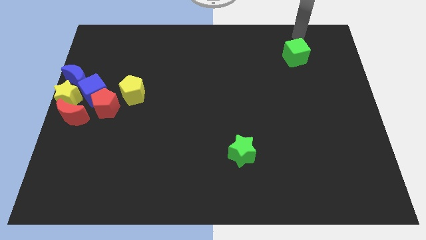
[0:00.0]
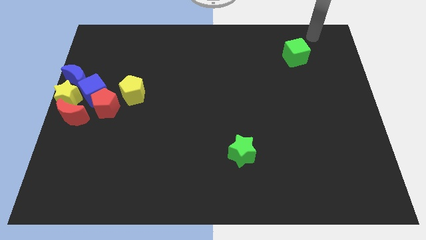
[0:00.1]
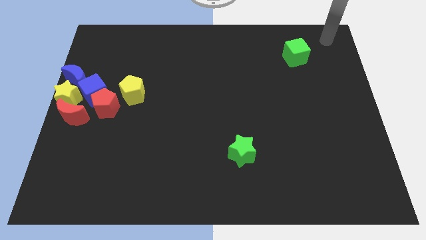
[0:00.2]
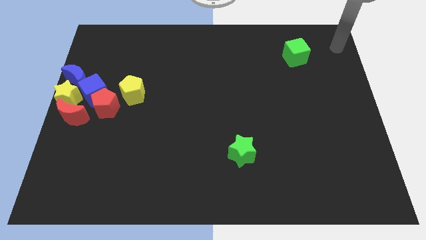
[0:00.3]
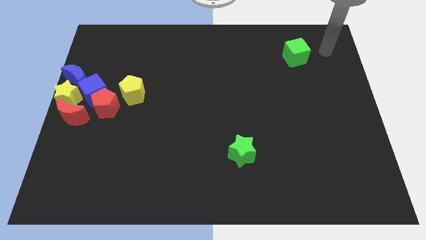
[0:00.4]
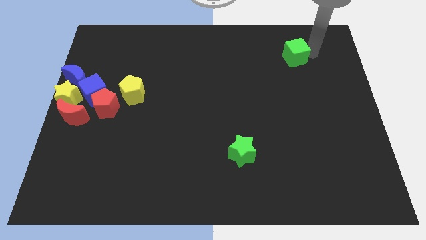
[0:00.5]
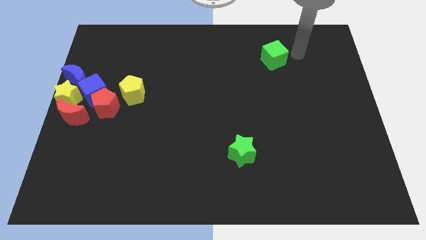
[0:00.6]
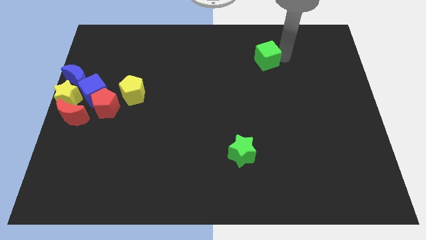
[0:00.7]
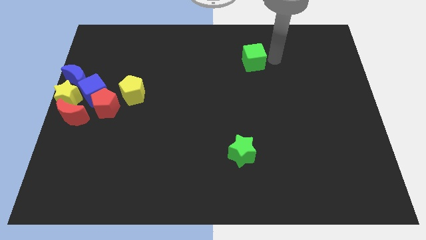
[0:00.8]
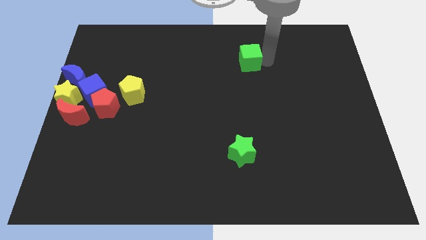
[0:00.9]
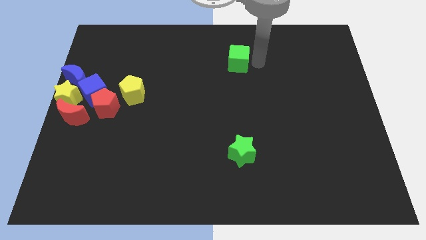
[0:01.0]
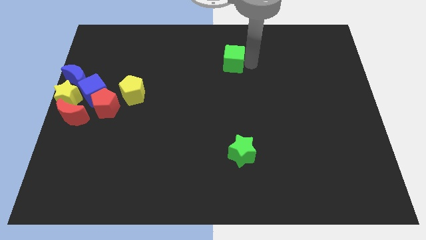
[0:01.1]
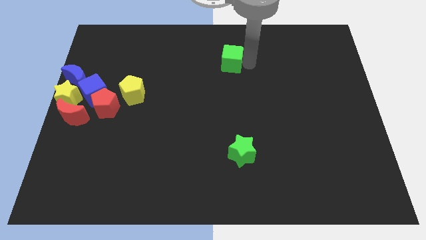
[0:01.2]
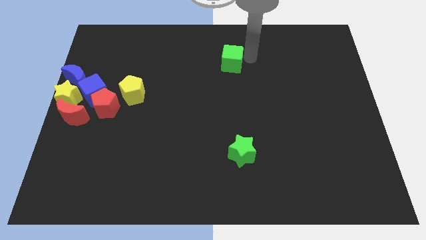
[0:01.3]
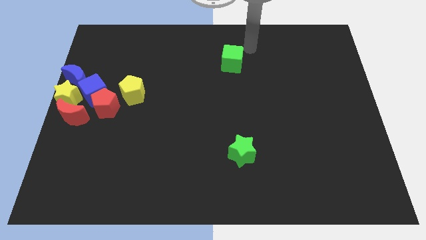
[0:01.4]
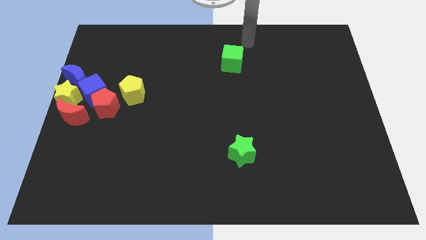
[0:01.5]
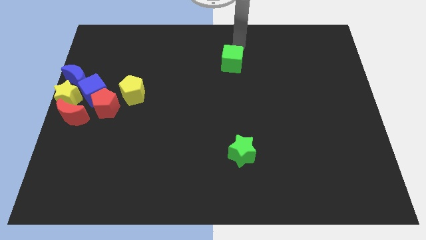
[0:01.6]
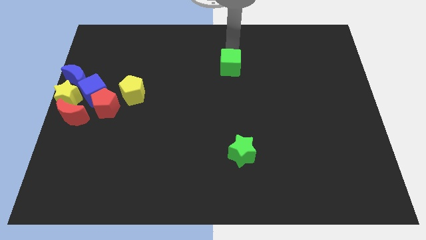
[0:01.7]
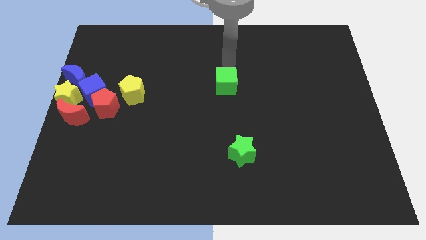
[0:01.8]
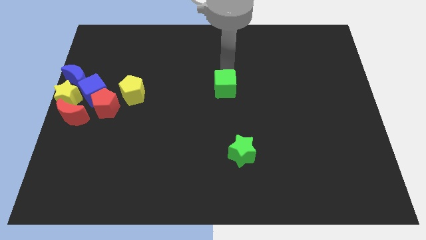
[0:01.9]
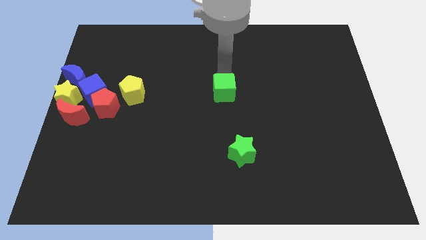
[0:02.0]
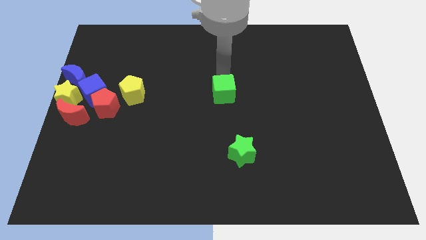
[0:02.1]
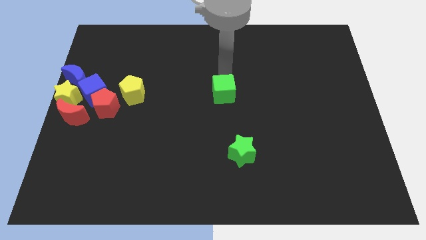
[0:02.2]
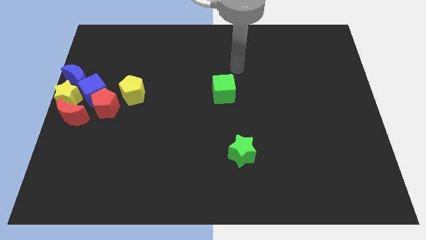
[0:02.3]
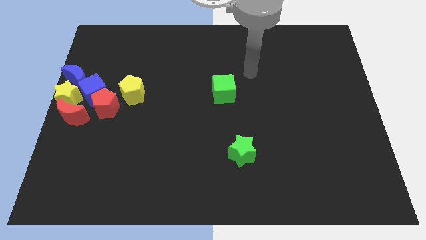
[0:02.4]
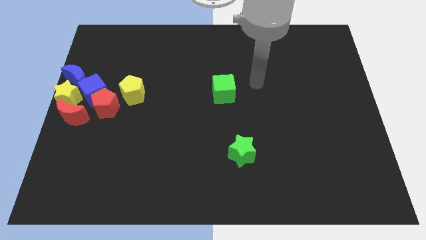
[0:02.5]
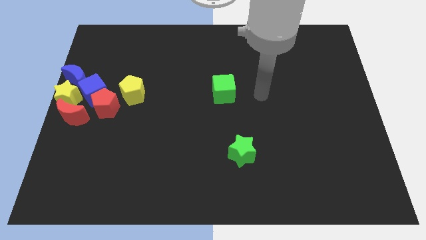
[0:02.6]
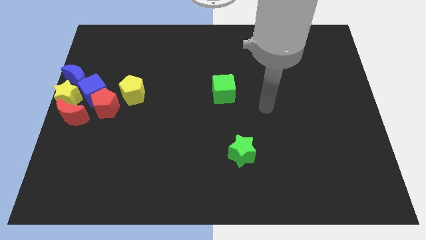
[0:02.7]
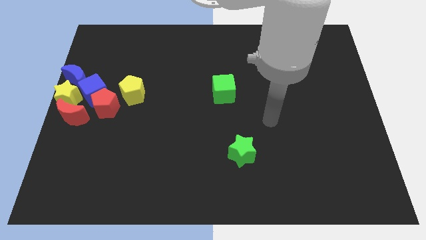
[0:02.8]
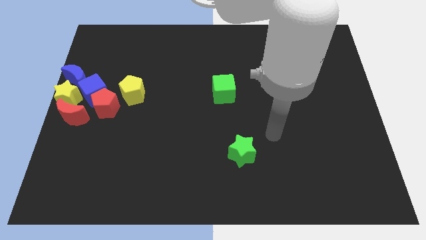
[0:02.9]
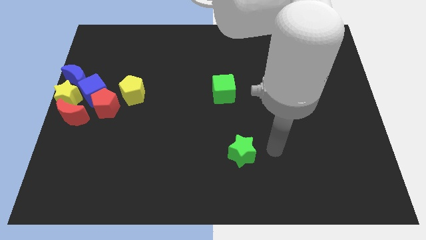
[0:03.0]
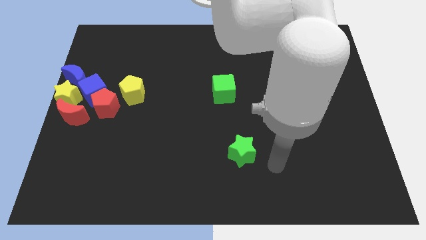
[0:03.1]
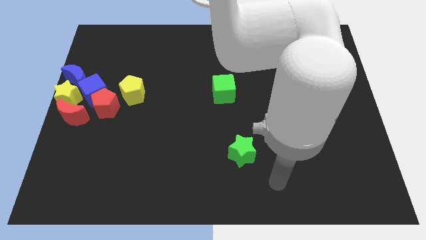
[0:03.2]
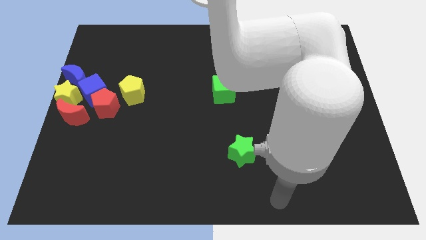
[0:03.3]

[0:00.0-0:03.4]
push the green cube to the center of the board

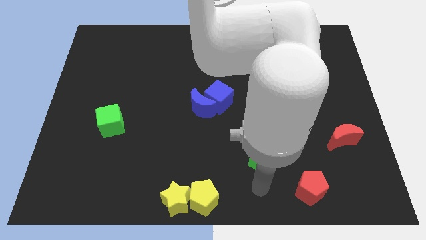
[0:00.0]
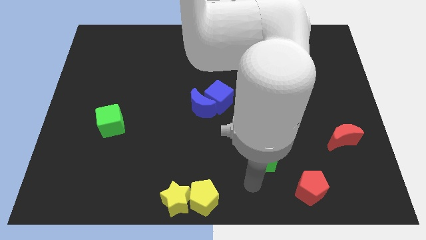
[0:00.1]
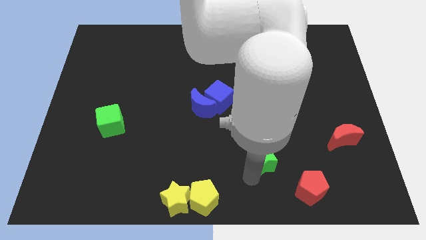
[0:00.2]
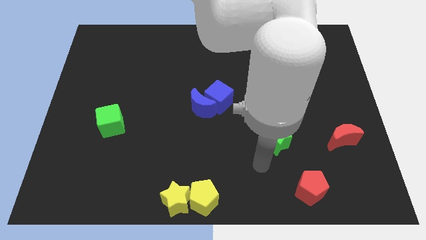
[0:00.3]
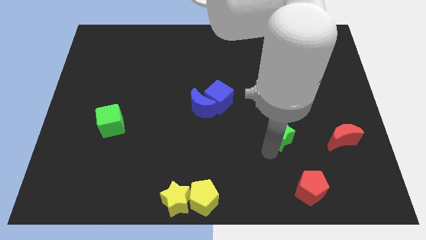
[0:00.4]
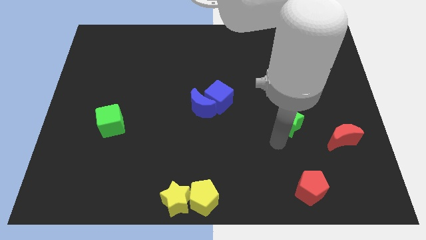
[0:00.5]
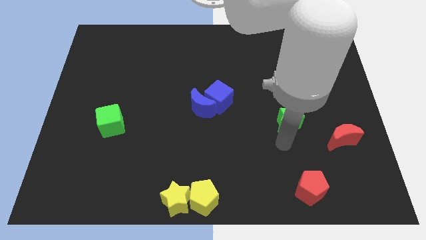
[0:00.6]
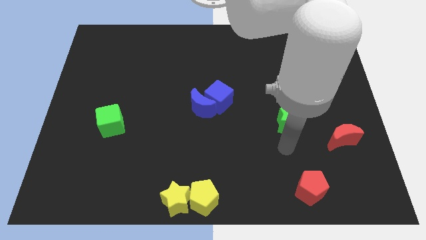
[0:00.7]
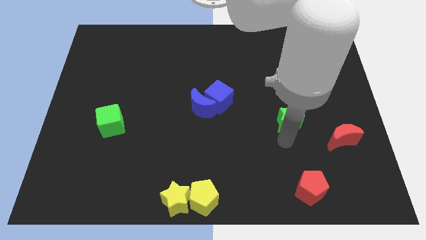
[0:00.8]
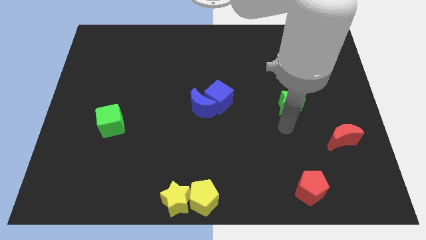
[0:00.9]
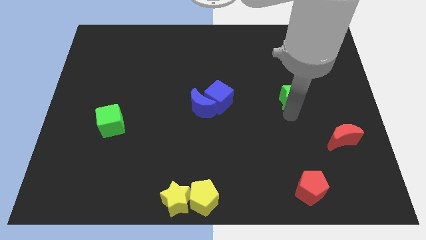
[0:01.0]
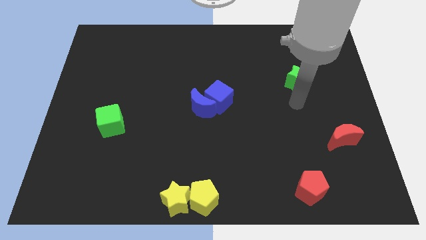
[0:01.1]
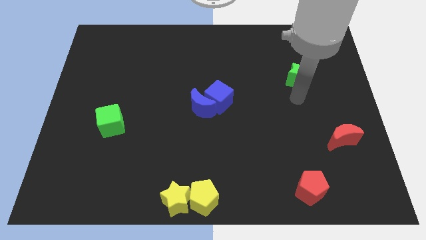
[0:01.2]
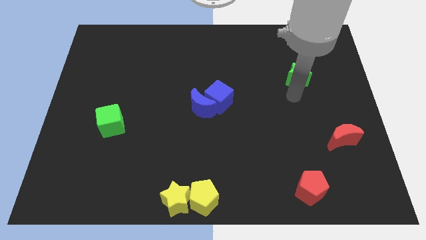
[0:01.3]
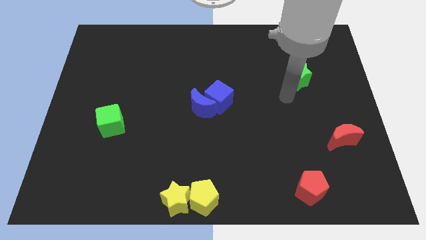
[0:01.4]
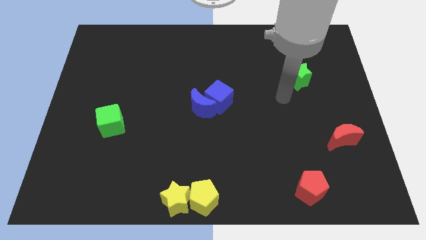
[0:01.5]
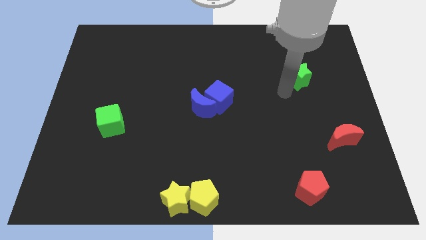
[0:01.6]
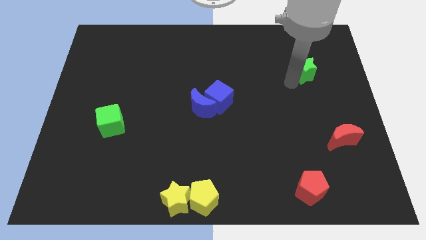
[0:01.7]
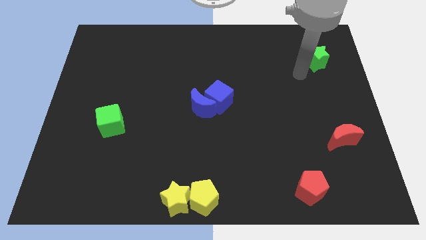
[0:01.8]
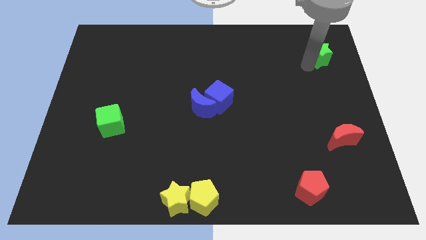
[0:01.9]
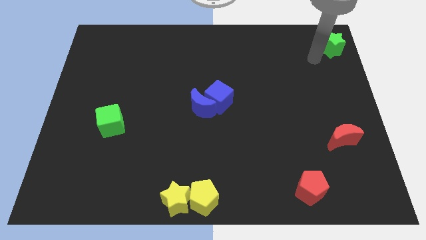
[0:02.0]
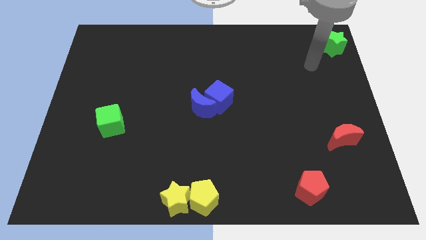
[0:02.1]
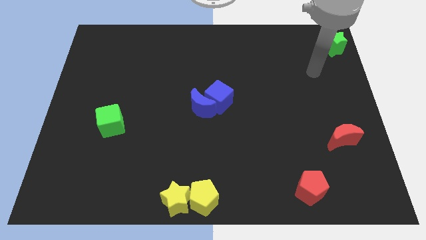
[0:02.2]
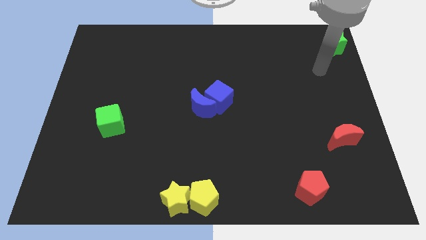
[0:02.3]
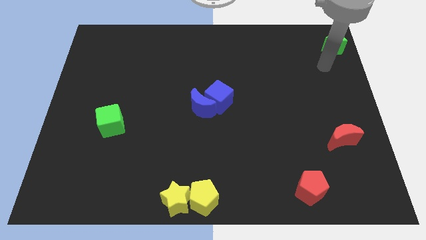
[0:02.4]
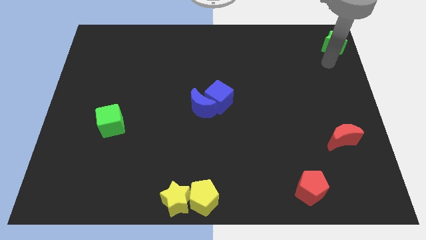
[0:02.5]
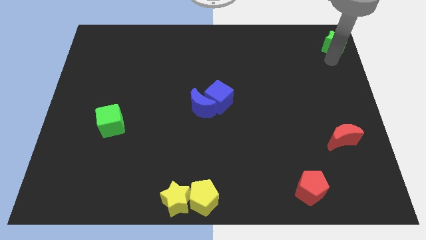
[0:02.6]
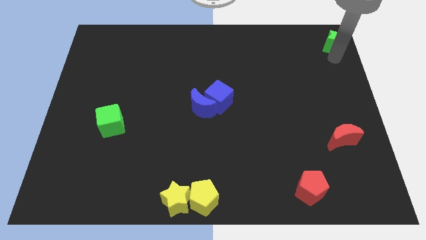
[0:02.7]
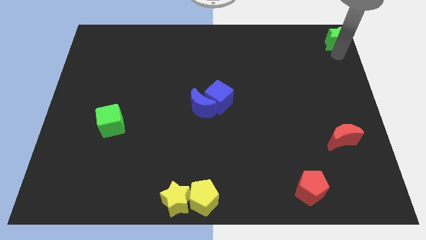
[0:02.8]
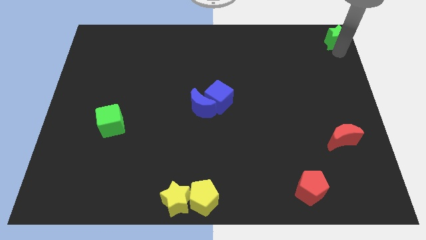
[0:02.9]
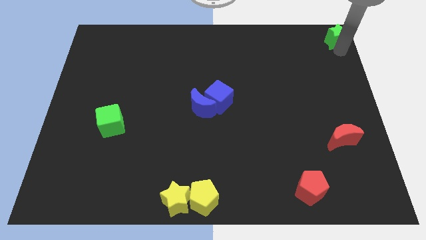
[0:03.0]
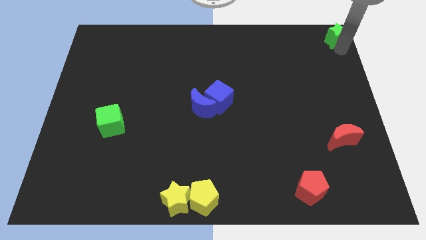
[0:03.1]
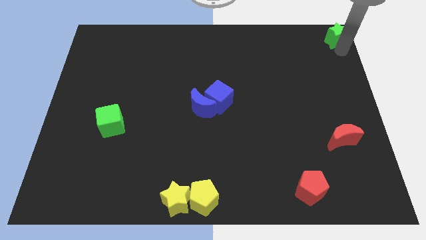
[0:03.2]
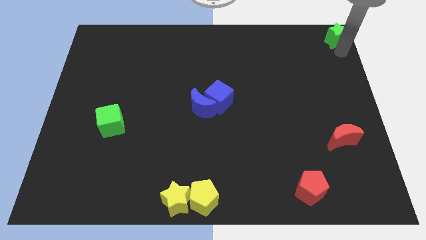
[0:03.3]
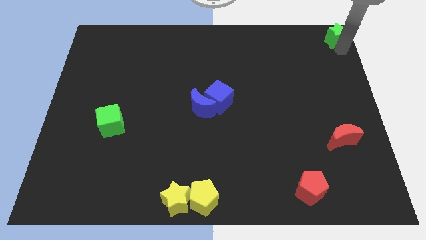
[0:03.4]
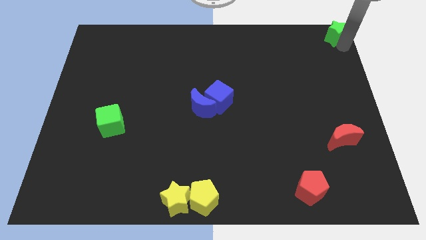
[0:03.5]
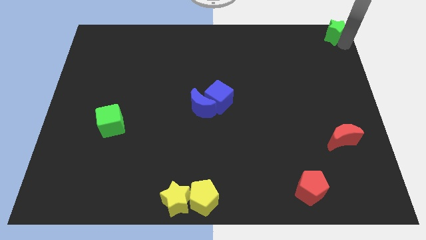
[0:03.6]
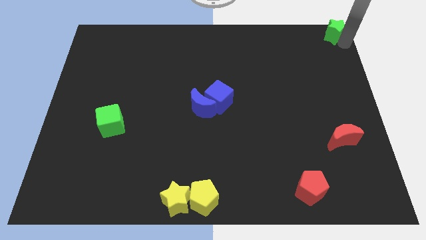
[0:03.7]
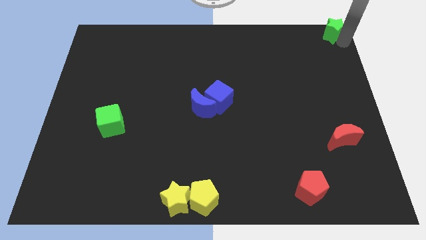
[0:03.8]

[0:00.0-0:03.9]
push the green star to the top right corner of the board

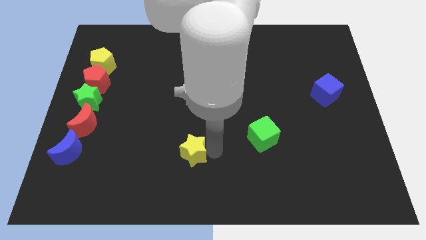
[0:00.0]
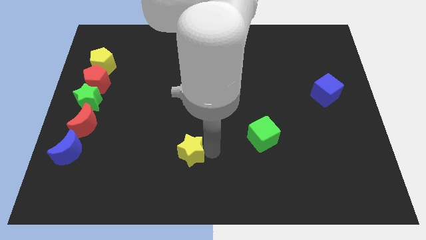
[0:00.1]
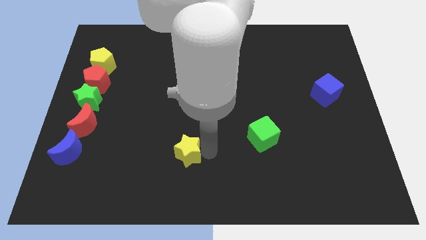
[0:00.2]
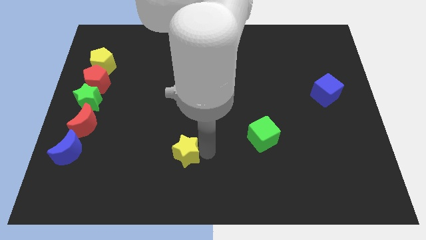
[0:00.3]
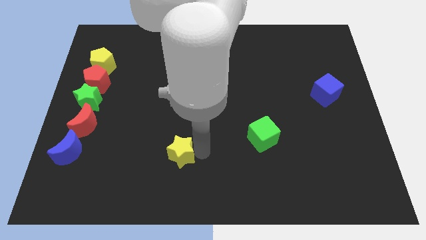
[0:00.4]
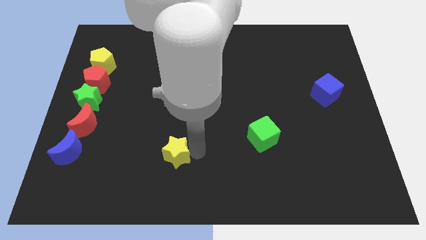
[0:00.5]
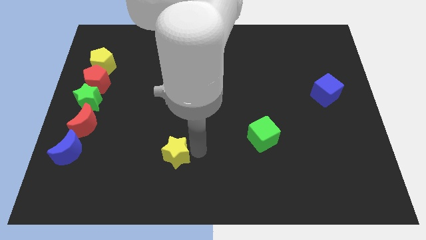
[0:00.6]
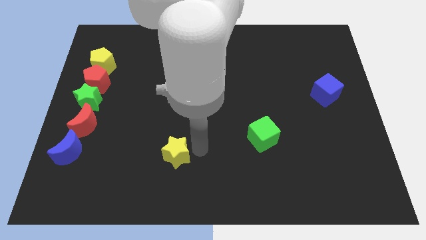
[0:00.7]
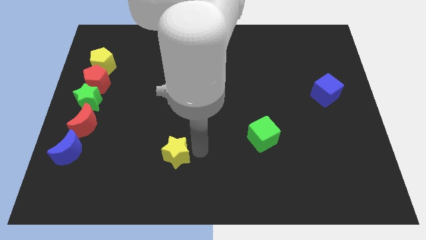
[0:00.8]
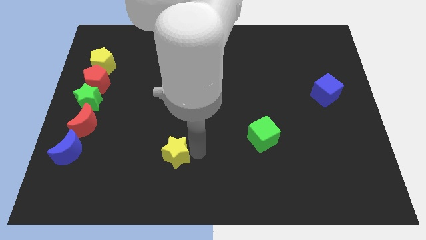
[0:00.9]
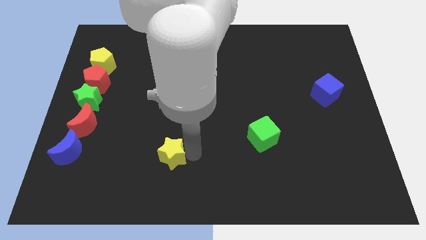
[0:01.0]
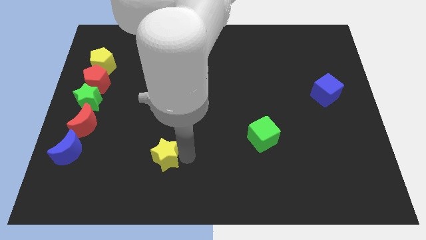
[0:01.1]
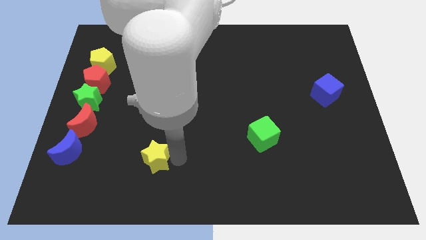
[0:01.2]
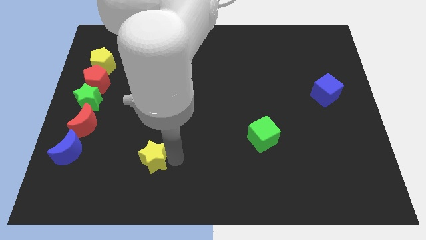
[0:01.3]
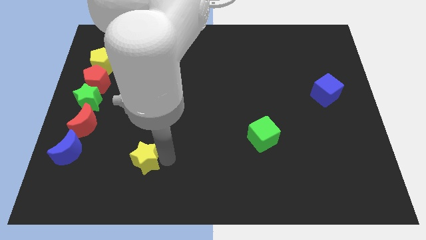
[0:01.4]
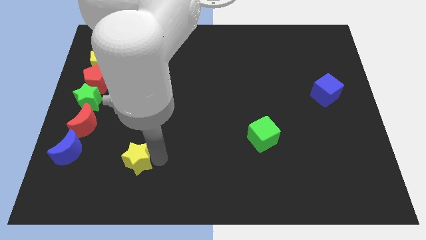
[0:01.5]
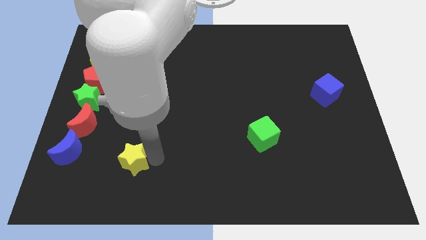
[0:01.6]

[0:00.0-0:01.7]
push the yellow star slightly to the left of the board

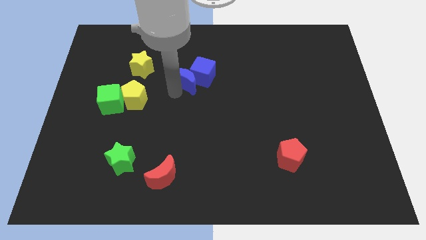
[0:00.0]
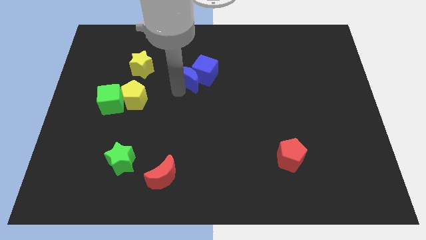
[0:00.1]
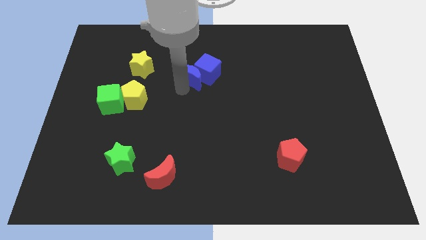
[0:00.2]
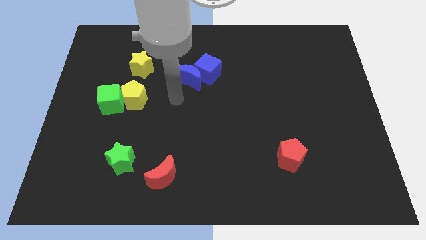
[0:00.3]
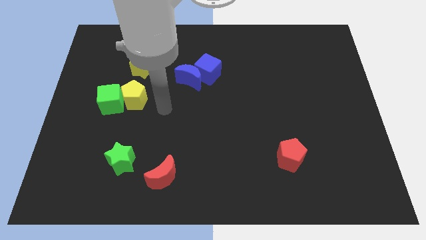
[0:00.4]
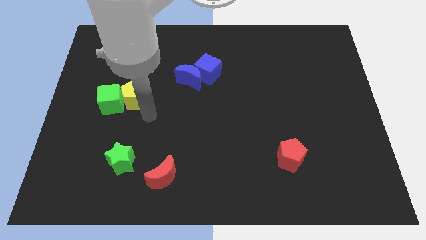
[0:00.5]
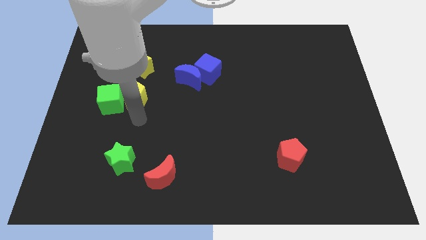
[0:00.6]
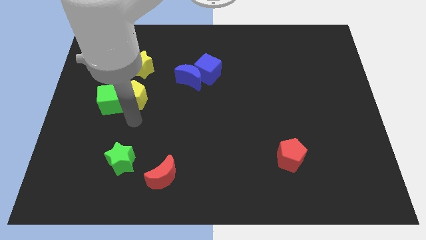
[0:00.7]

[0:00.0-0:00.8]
place the blue blocks too the right of yellow star
